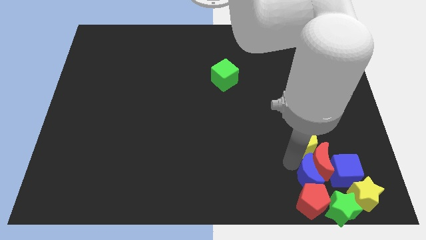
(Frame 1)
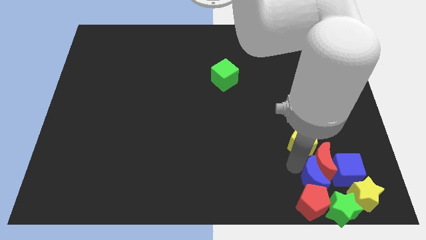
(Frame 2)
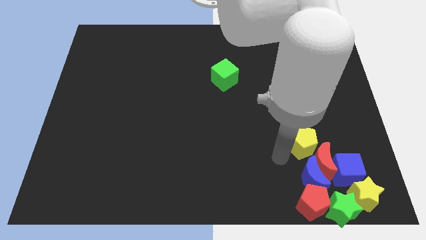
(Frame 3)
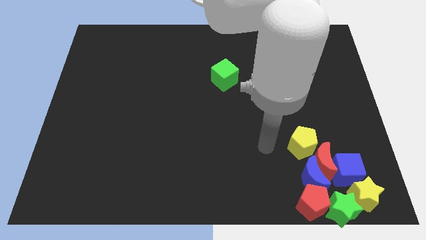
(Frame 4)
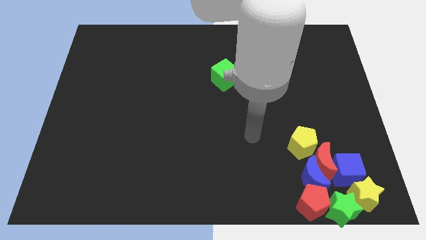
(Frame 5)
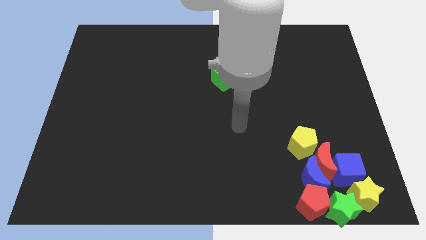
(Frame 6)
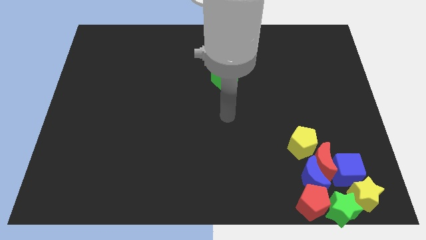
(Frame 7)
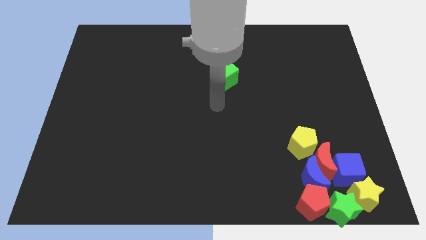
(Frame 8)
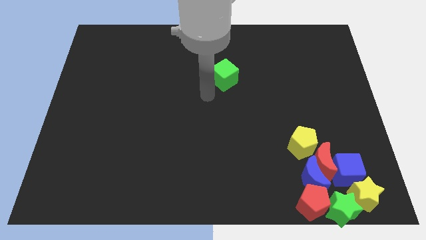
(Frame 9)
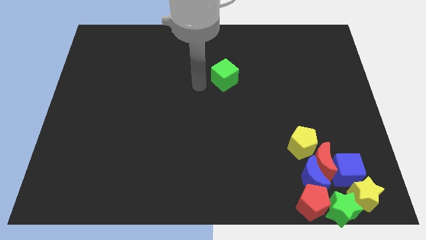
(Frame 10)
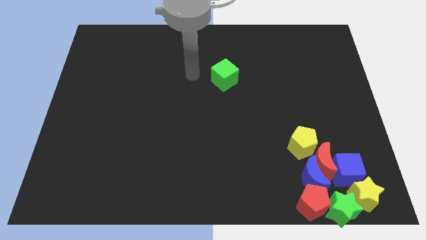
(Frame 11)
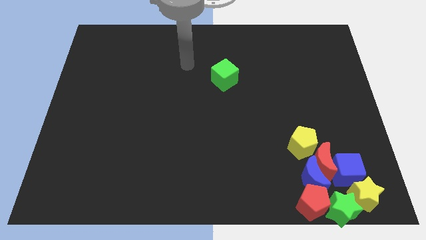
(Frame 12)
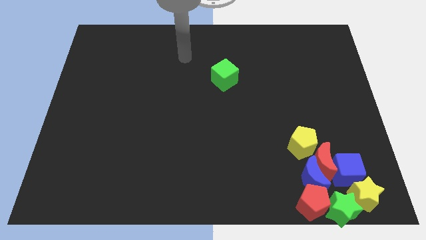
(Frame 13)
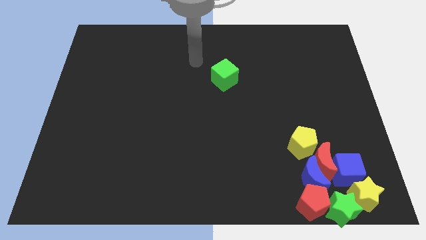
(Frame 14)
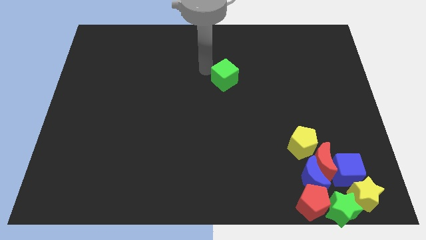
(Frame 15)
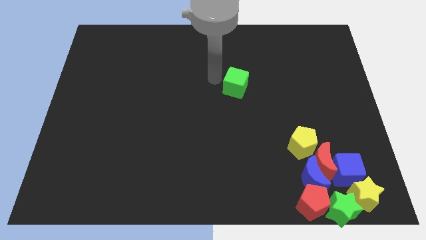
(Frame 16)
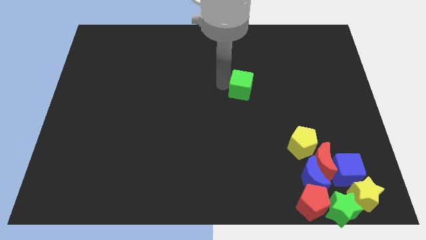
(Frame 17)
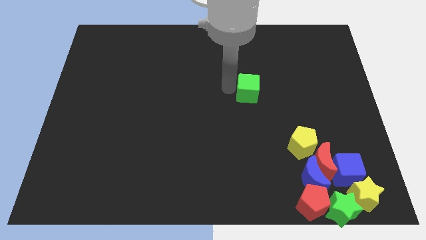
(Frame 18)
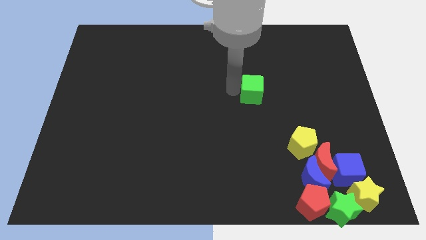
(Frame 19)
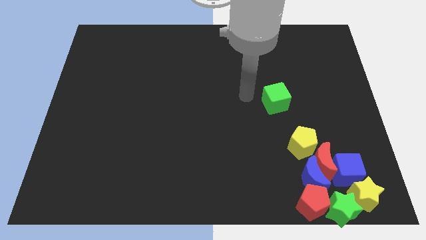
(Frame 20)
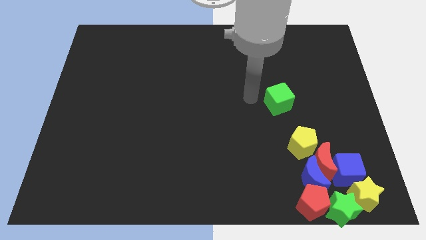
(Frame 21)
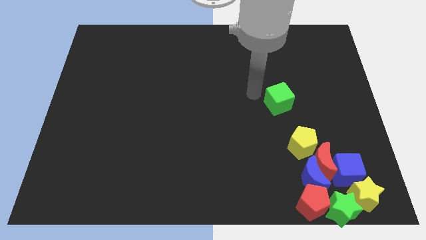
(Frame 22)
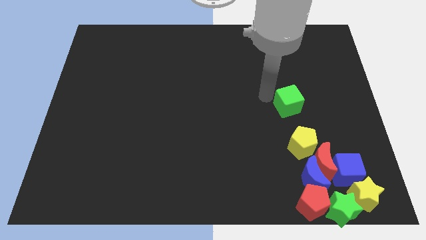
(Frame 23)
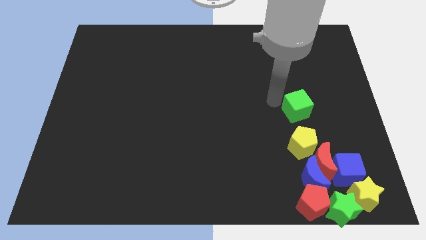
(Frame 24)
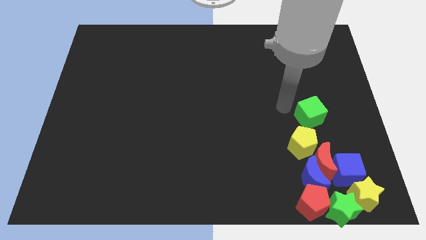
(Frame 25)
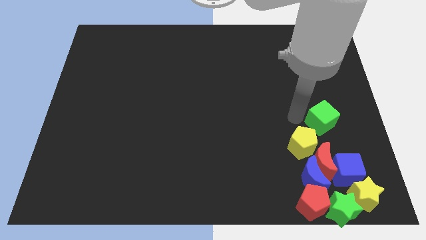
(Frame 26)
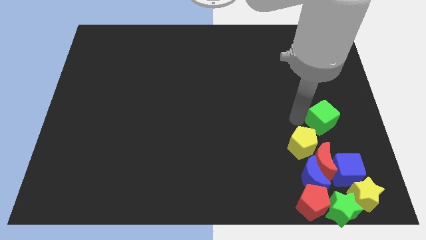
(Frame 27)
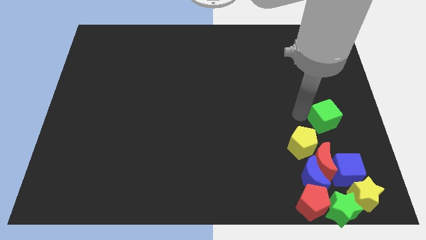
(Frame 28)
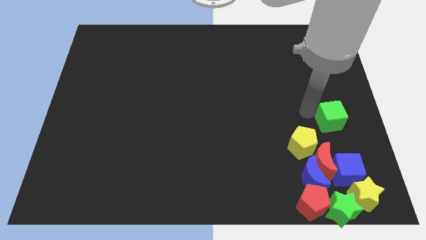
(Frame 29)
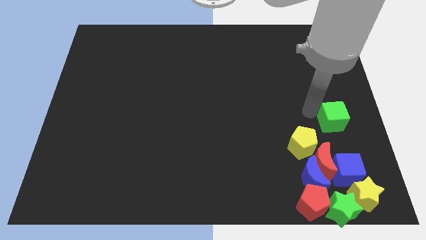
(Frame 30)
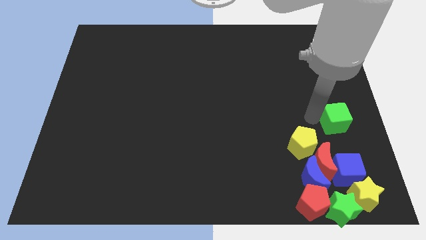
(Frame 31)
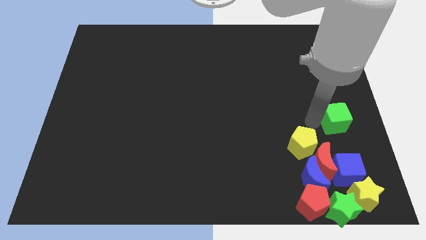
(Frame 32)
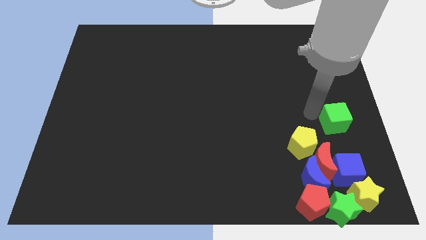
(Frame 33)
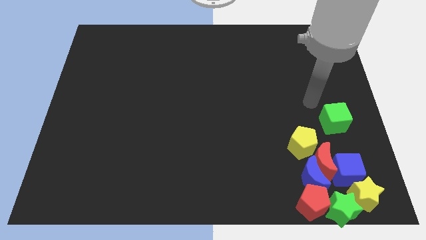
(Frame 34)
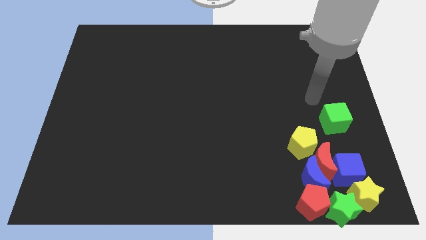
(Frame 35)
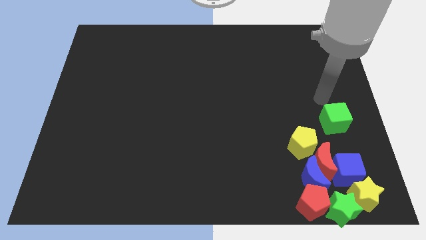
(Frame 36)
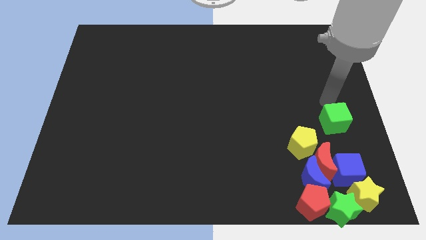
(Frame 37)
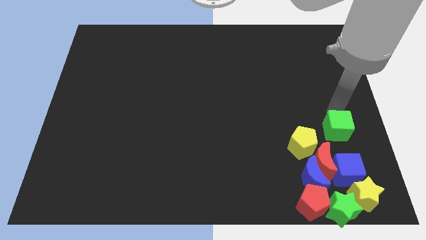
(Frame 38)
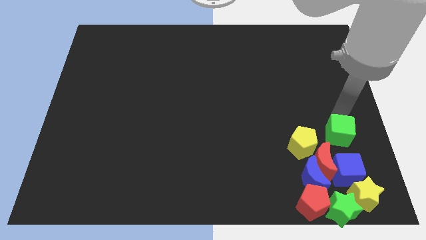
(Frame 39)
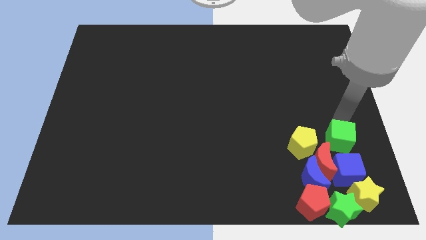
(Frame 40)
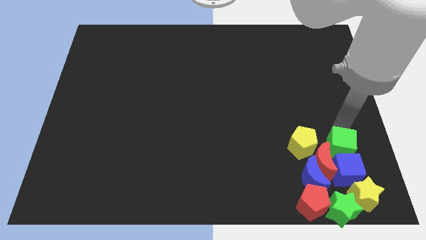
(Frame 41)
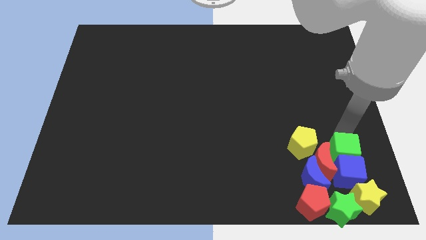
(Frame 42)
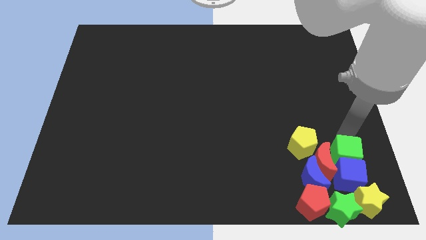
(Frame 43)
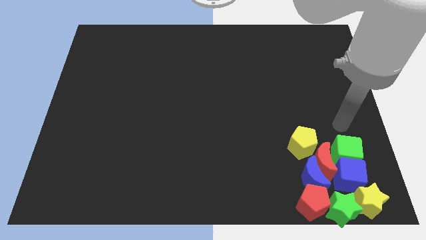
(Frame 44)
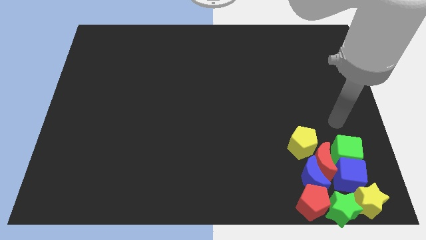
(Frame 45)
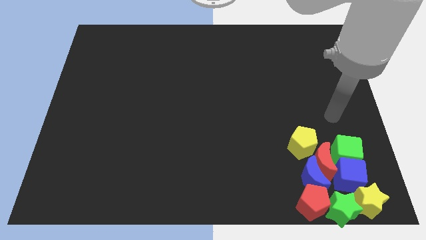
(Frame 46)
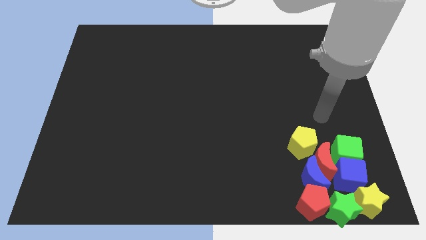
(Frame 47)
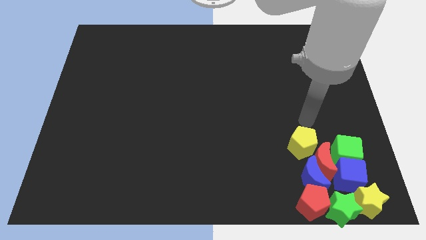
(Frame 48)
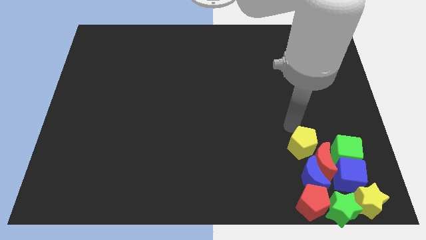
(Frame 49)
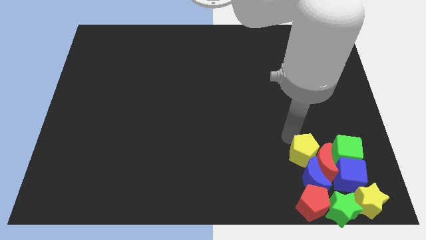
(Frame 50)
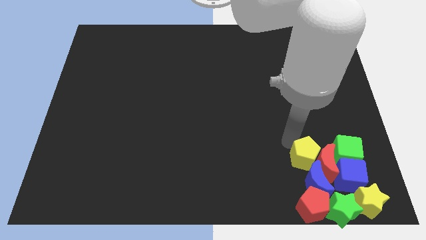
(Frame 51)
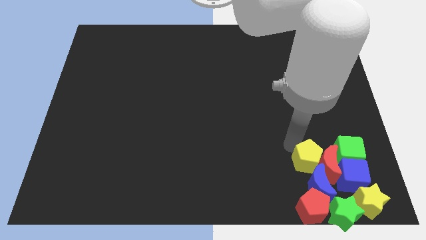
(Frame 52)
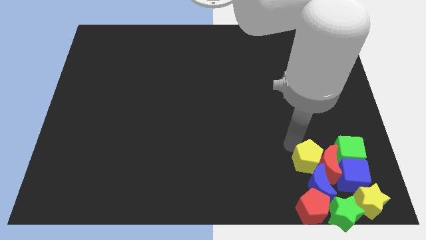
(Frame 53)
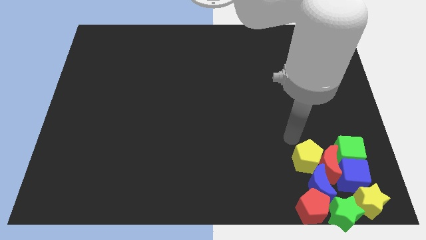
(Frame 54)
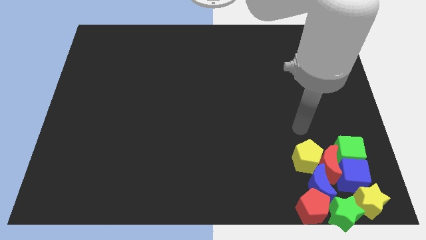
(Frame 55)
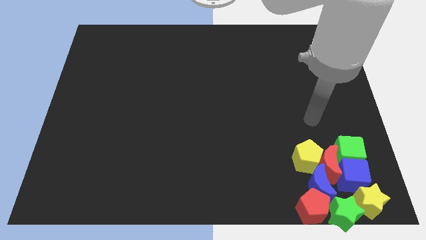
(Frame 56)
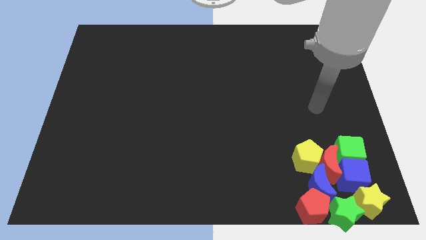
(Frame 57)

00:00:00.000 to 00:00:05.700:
group up all the blocks at the bottom right of the table

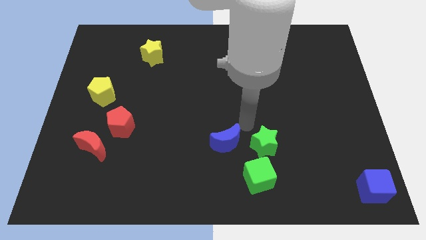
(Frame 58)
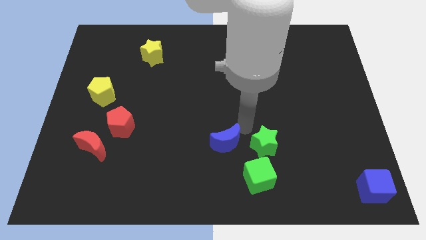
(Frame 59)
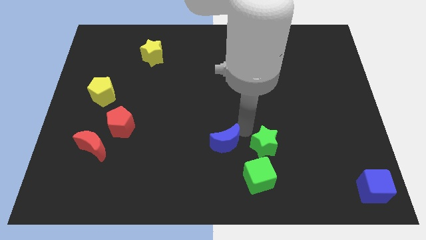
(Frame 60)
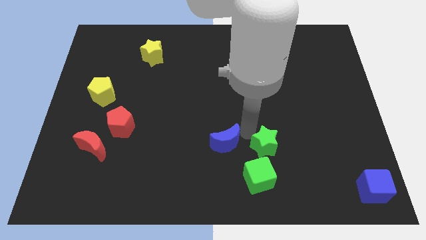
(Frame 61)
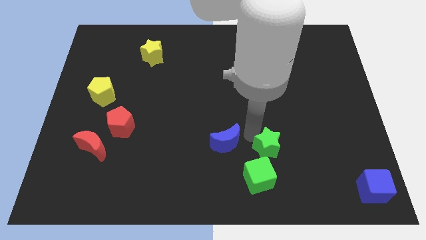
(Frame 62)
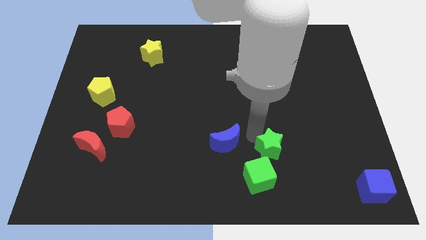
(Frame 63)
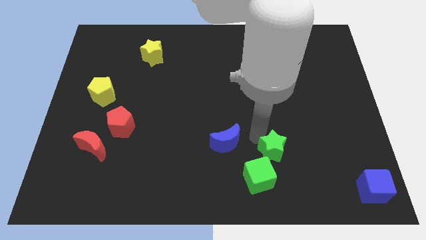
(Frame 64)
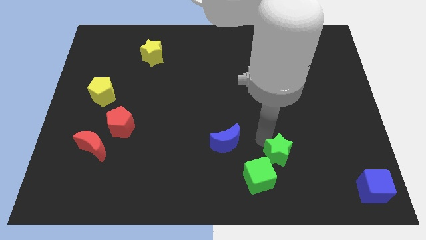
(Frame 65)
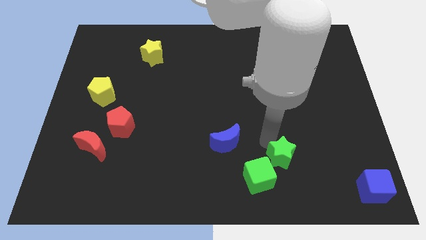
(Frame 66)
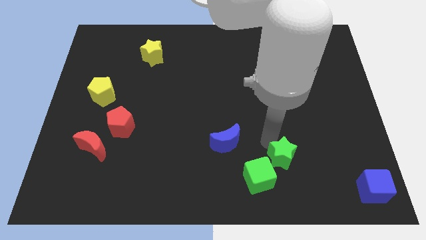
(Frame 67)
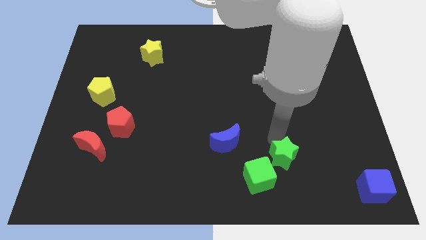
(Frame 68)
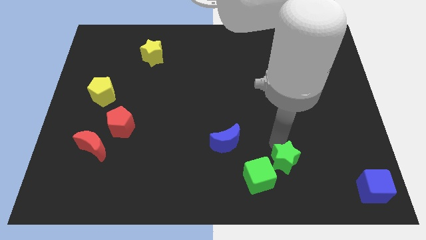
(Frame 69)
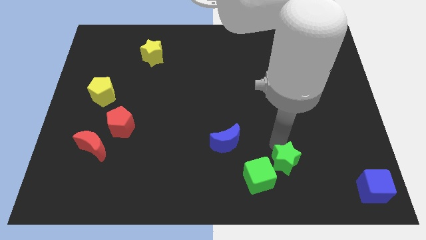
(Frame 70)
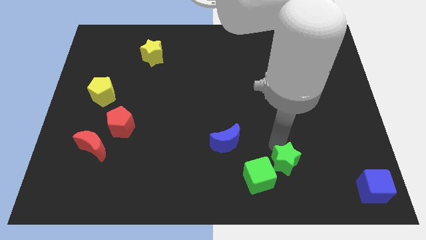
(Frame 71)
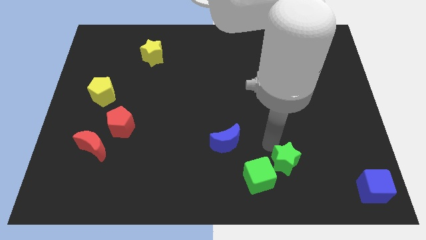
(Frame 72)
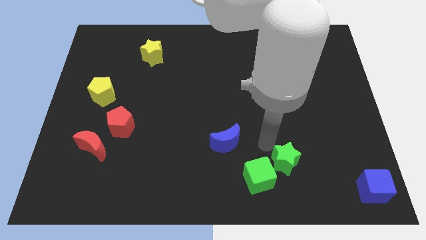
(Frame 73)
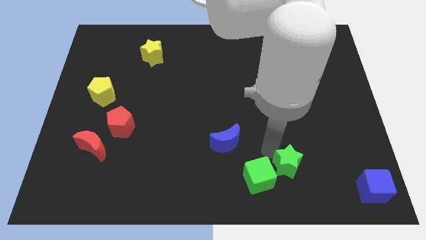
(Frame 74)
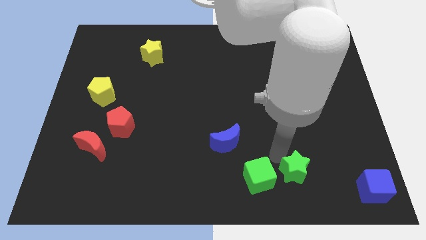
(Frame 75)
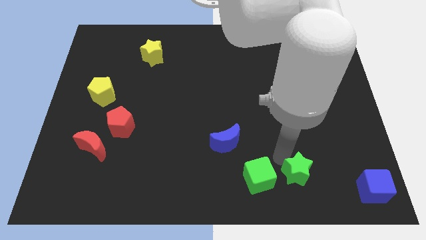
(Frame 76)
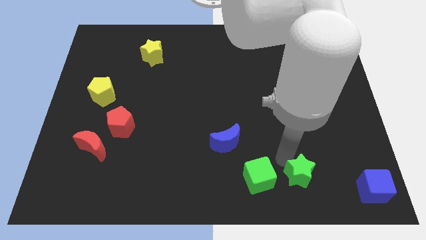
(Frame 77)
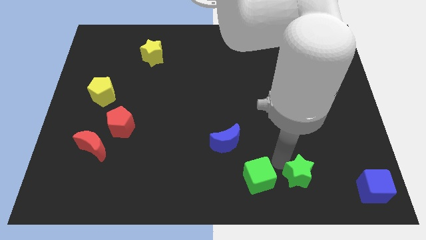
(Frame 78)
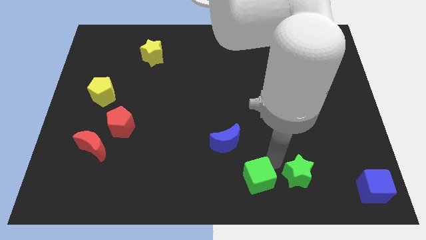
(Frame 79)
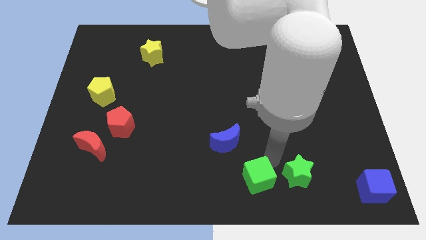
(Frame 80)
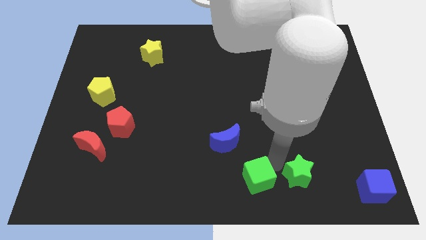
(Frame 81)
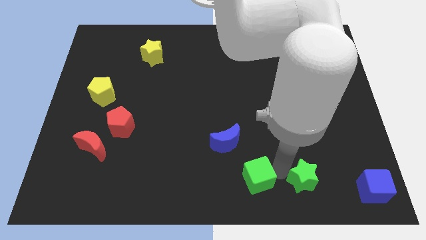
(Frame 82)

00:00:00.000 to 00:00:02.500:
move the green star to the right of the green cube

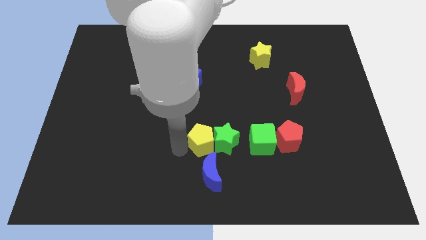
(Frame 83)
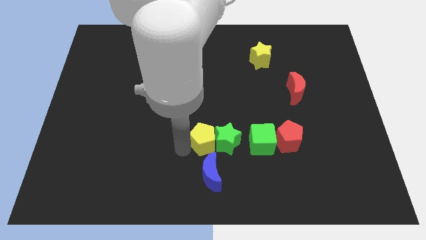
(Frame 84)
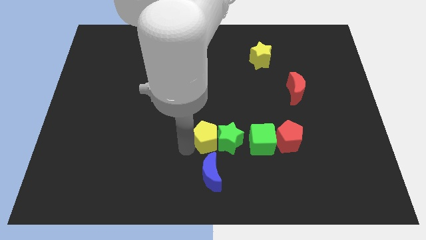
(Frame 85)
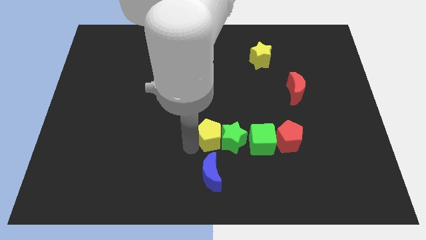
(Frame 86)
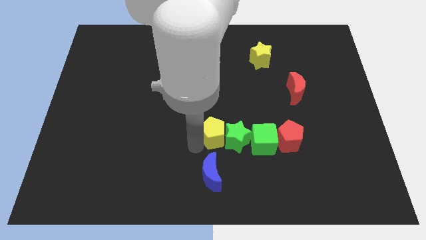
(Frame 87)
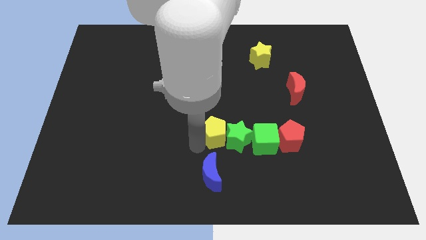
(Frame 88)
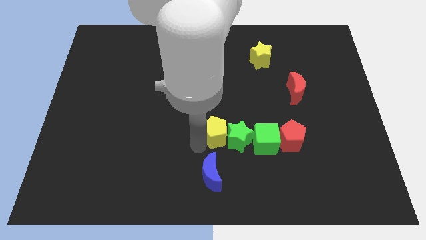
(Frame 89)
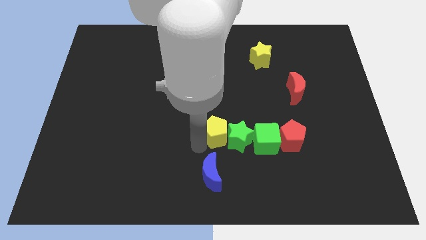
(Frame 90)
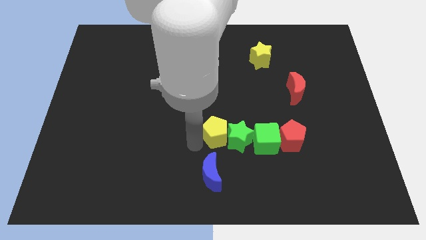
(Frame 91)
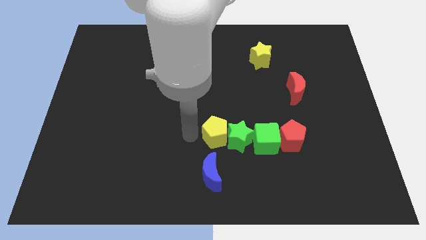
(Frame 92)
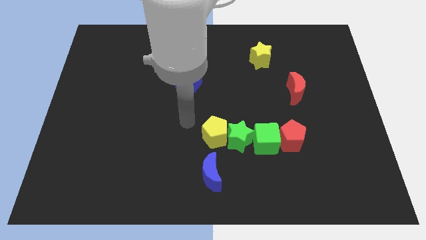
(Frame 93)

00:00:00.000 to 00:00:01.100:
push green star and yellow pentagon in to green cube
